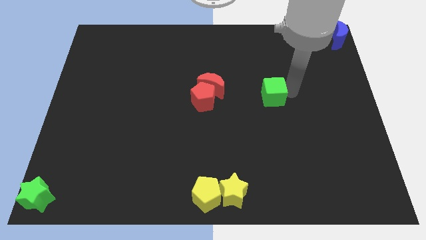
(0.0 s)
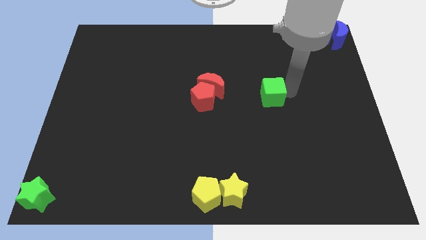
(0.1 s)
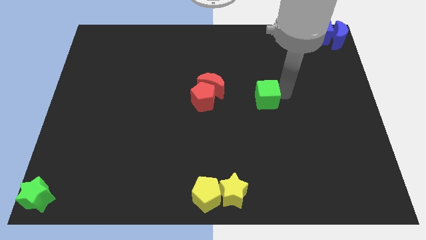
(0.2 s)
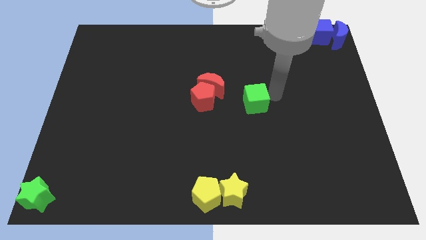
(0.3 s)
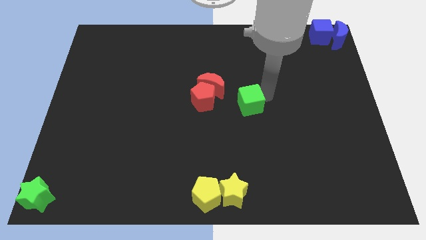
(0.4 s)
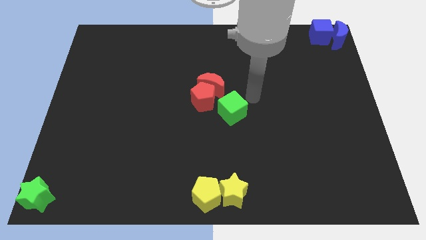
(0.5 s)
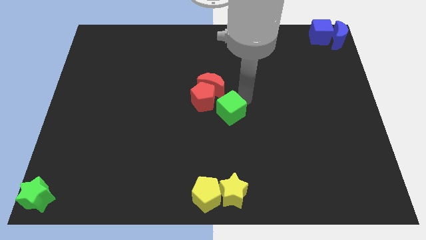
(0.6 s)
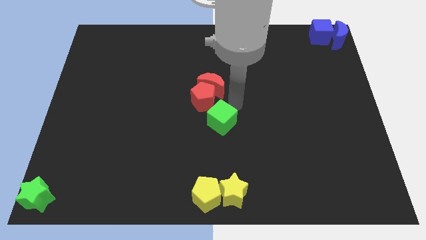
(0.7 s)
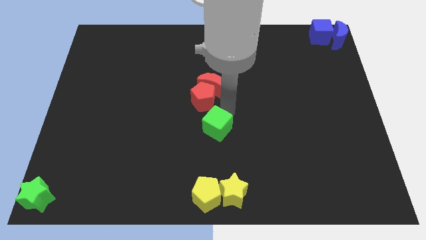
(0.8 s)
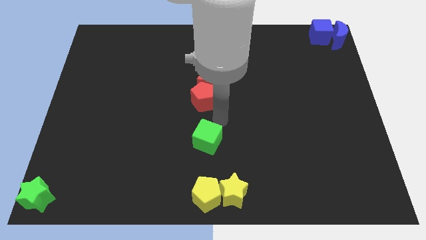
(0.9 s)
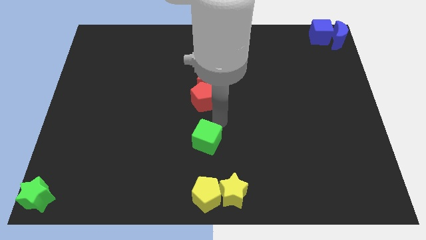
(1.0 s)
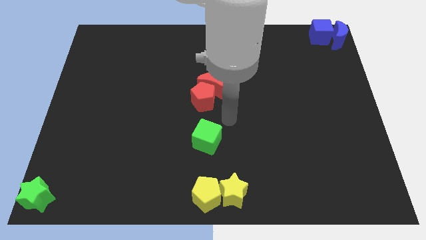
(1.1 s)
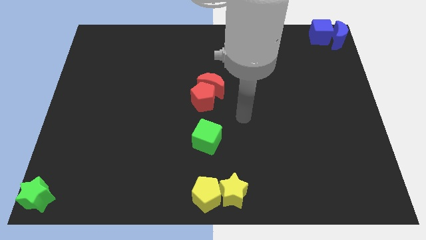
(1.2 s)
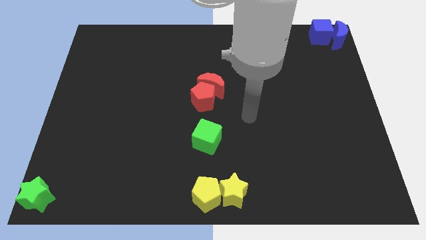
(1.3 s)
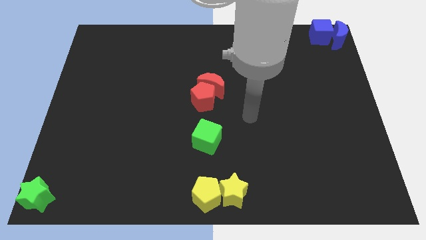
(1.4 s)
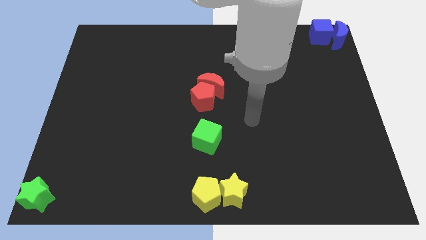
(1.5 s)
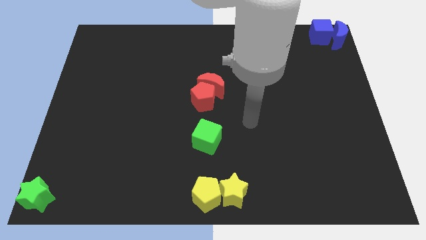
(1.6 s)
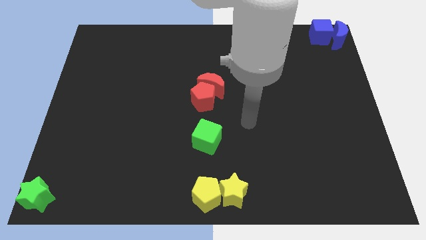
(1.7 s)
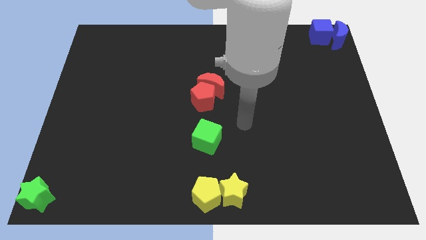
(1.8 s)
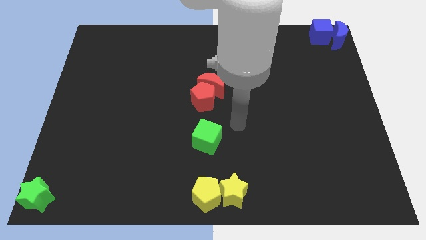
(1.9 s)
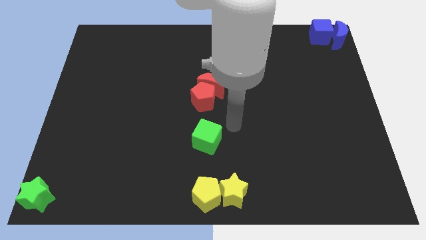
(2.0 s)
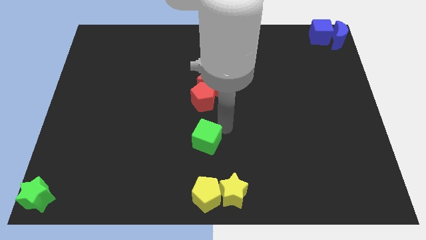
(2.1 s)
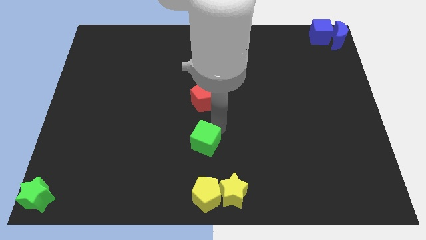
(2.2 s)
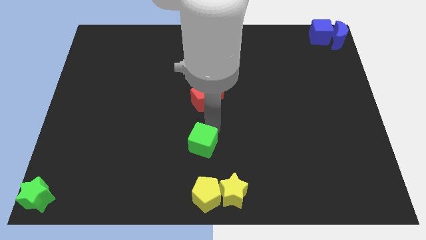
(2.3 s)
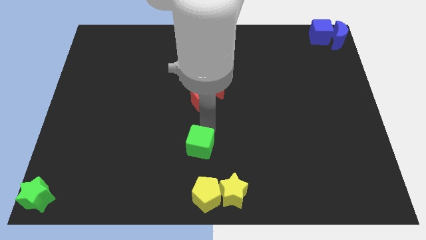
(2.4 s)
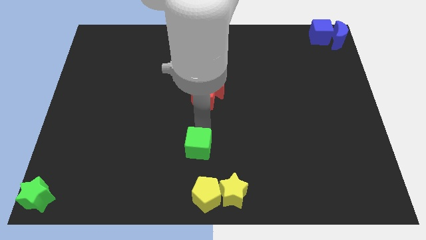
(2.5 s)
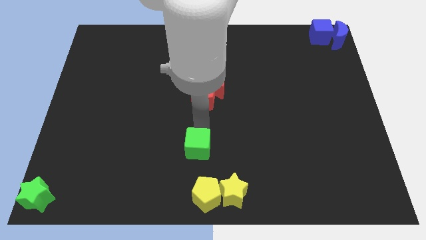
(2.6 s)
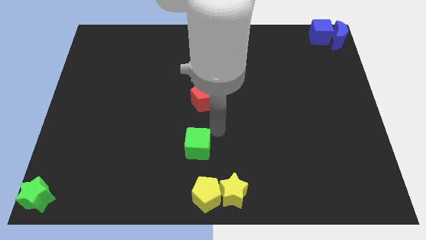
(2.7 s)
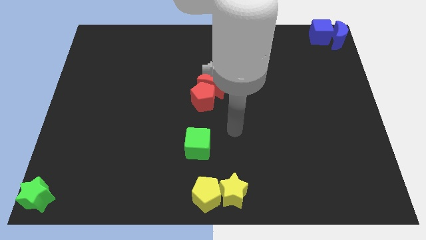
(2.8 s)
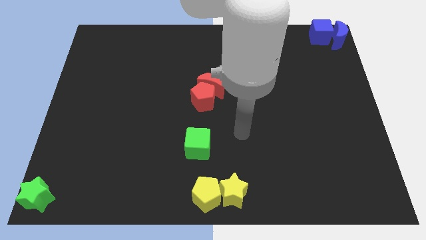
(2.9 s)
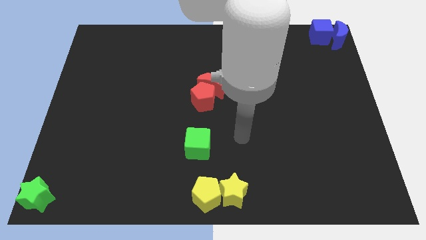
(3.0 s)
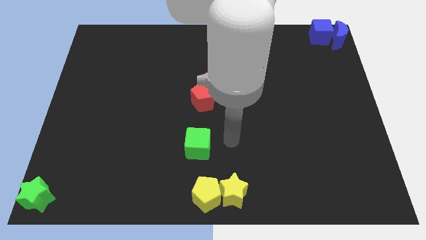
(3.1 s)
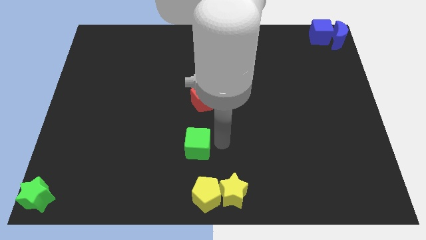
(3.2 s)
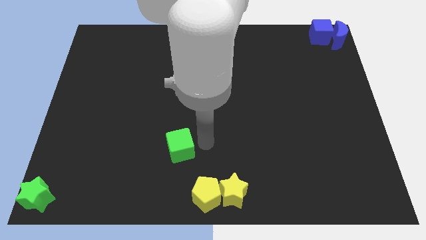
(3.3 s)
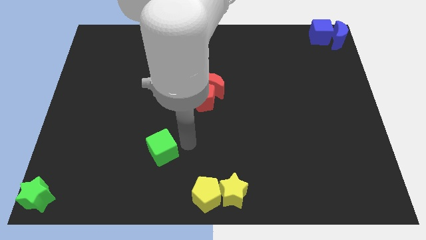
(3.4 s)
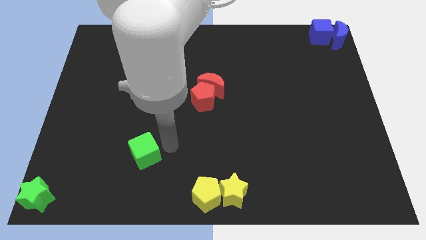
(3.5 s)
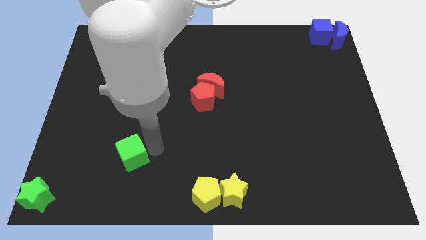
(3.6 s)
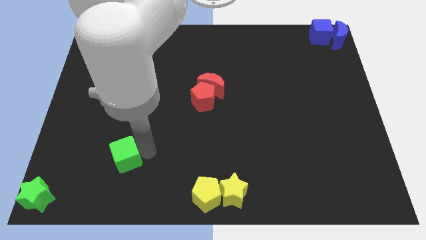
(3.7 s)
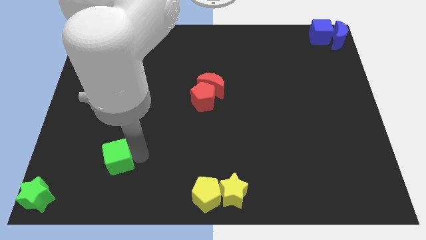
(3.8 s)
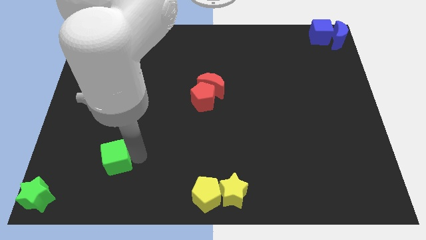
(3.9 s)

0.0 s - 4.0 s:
move the green cube diagonally top left to the yellow blocks

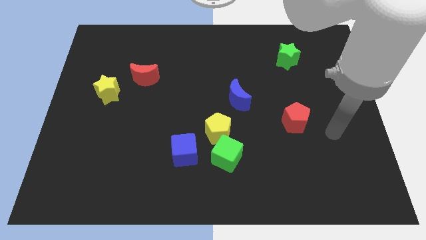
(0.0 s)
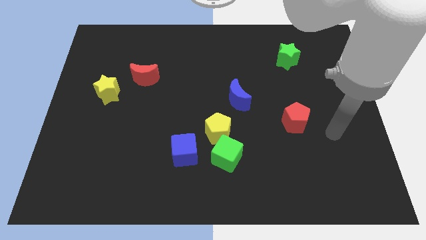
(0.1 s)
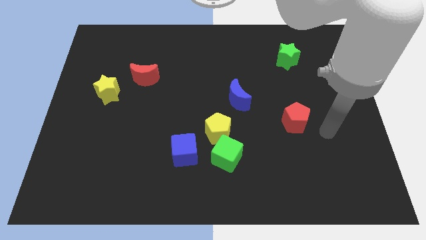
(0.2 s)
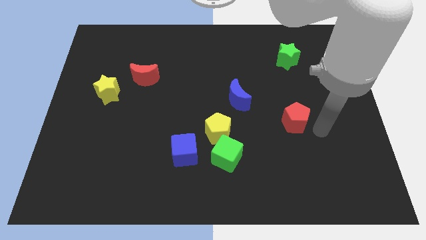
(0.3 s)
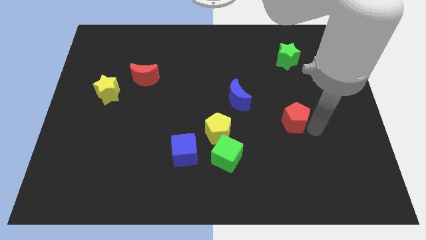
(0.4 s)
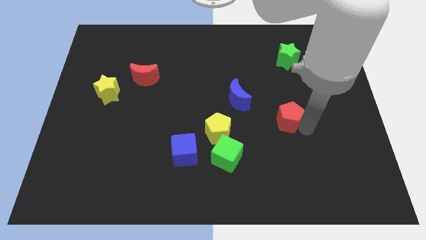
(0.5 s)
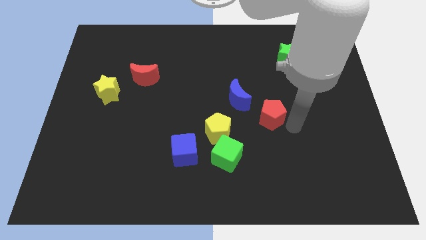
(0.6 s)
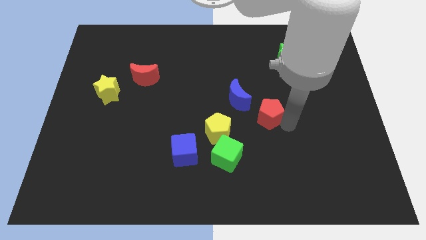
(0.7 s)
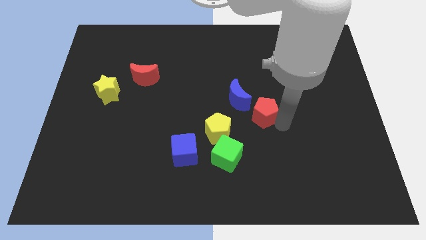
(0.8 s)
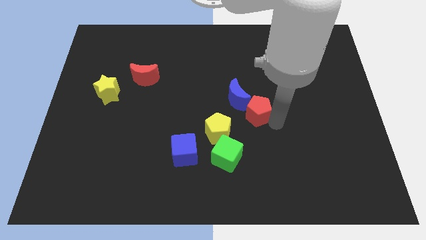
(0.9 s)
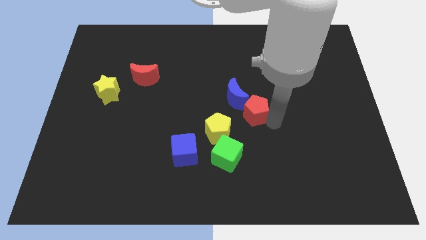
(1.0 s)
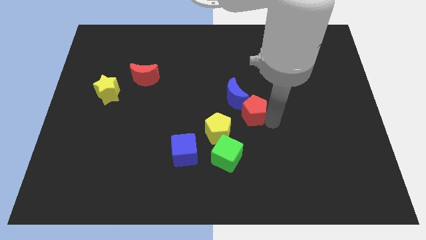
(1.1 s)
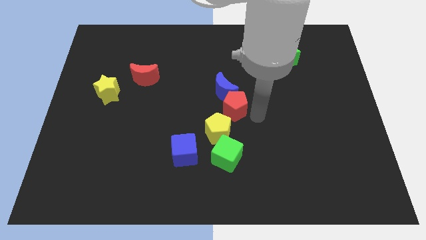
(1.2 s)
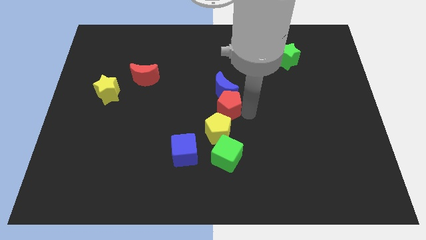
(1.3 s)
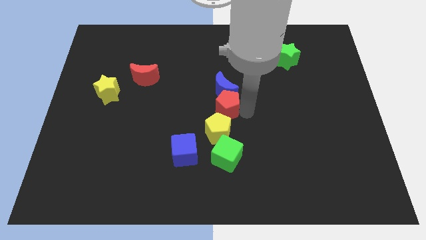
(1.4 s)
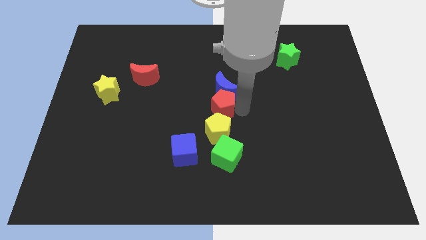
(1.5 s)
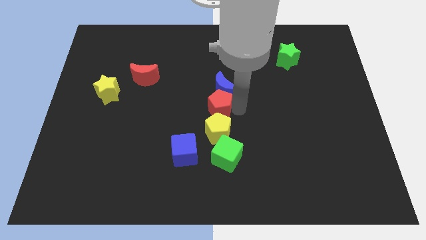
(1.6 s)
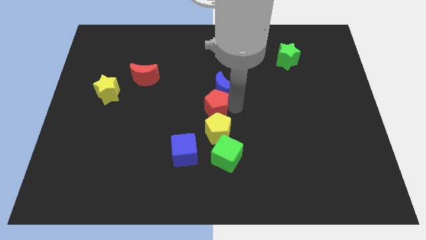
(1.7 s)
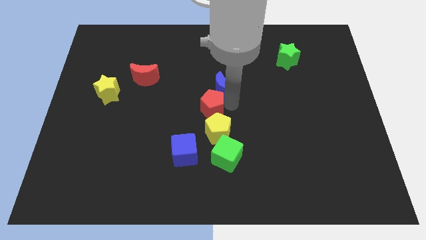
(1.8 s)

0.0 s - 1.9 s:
place the red pentgon in between the yellow pentagon and blue crescent

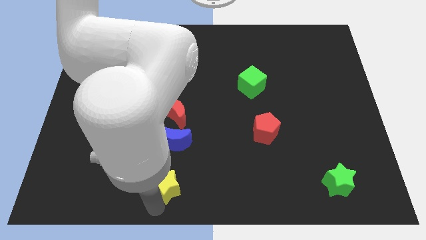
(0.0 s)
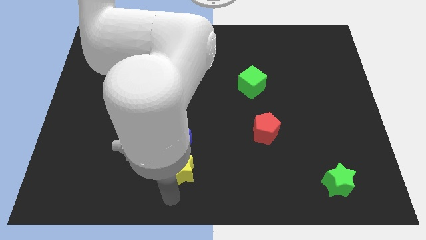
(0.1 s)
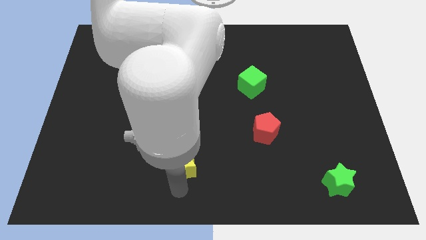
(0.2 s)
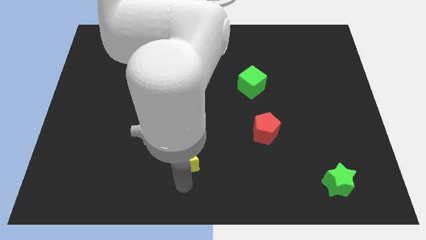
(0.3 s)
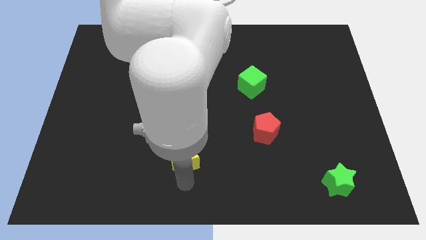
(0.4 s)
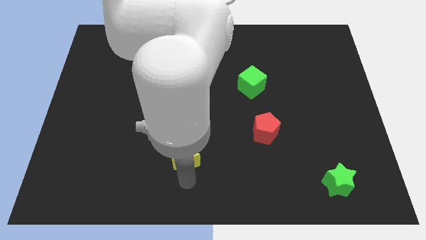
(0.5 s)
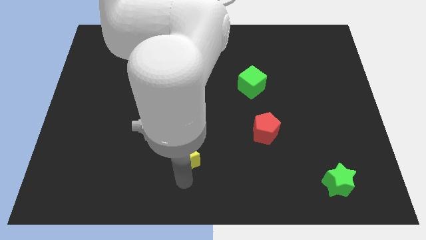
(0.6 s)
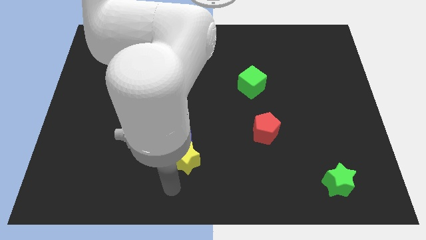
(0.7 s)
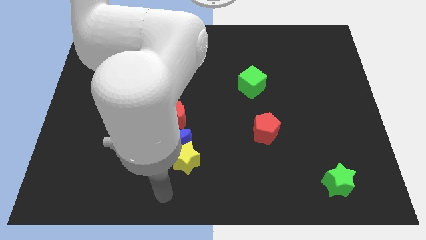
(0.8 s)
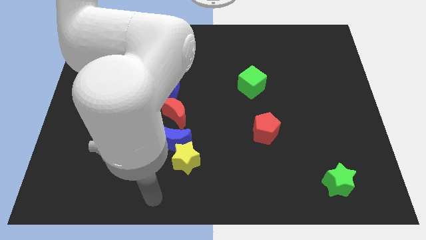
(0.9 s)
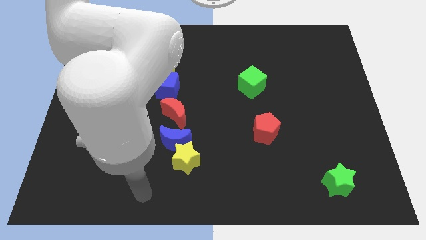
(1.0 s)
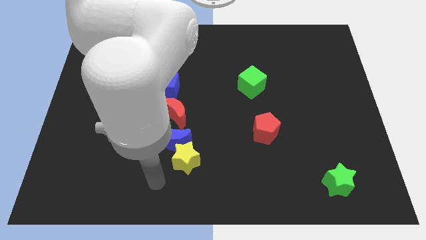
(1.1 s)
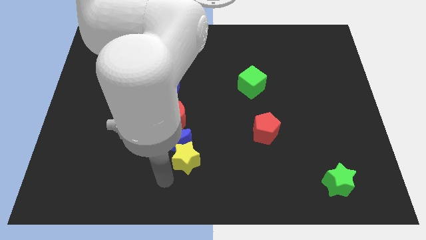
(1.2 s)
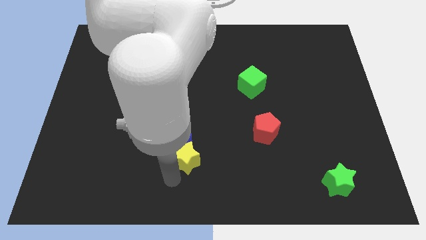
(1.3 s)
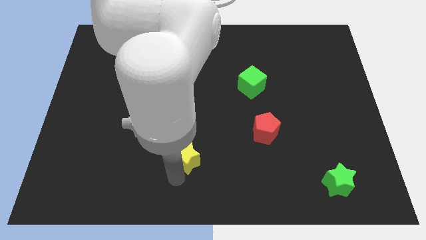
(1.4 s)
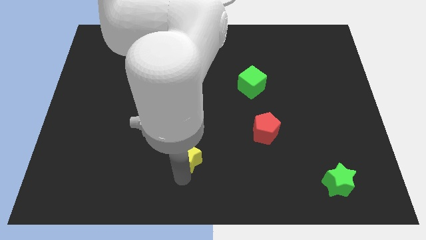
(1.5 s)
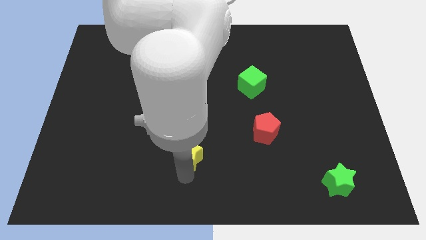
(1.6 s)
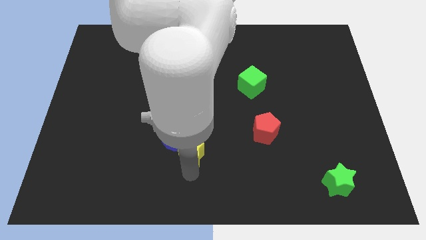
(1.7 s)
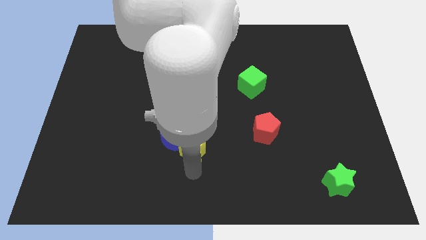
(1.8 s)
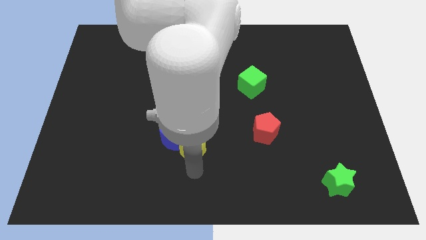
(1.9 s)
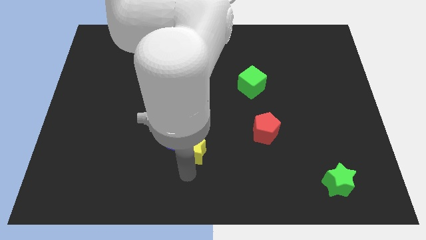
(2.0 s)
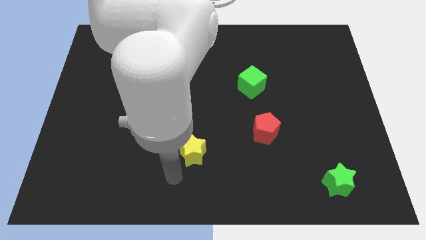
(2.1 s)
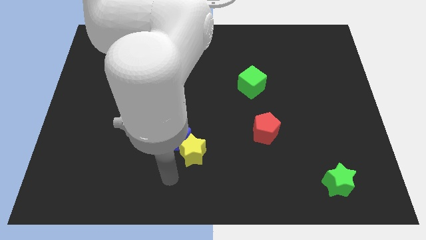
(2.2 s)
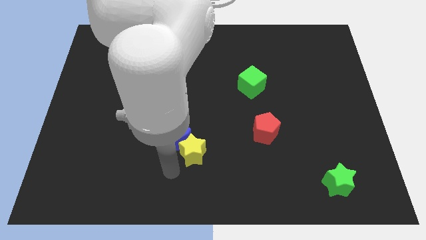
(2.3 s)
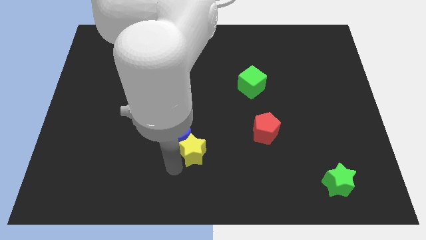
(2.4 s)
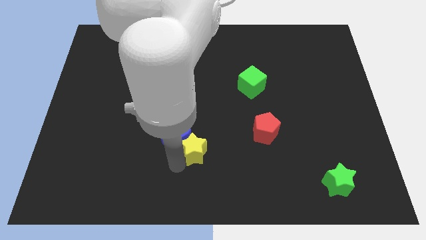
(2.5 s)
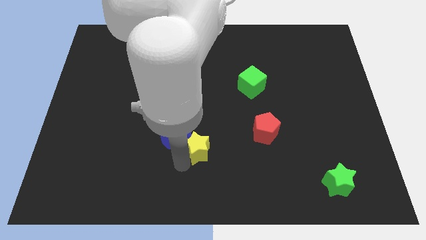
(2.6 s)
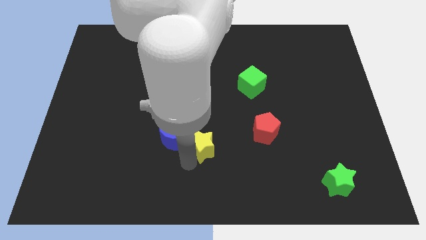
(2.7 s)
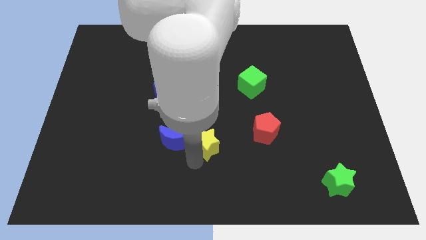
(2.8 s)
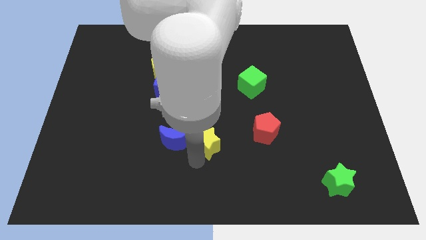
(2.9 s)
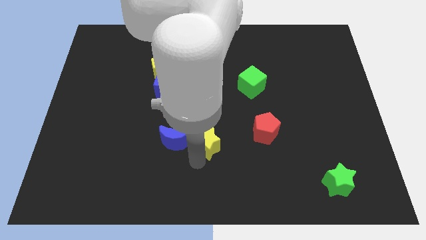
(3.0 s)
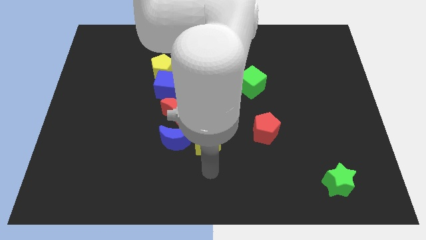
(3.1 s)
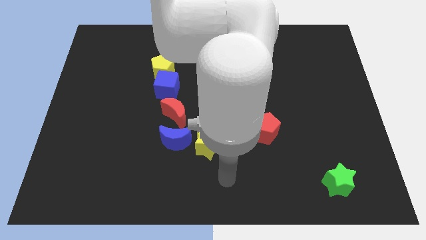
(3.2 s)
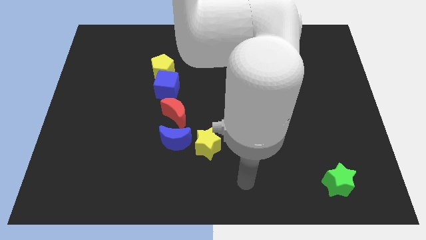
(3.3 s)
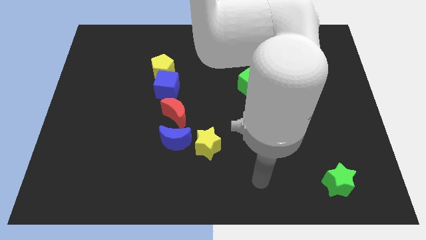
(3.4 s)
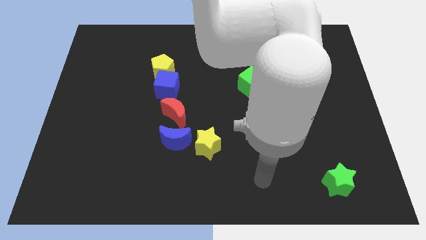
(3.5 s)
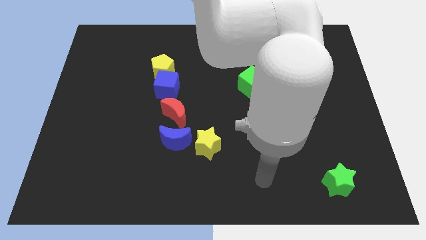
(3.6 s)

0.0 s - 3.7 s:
push the yellow star to the right side of the blue crescent
